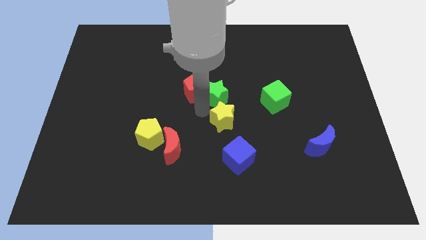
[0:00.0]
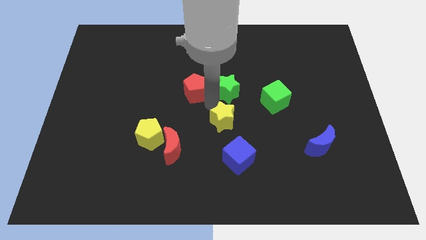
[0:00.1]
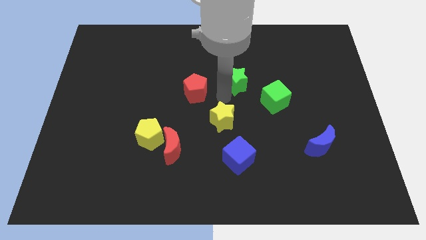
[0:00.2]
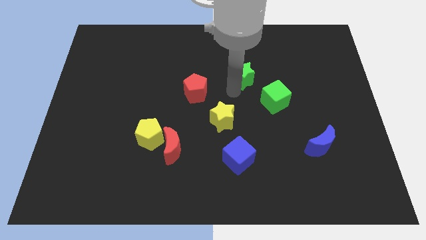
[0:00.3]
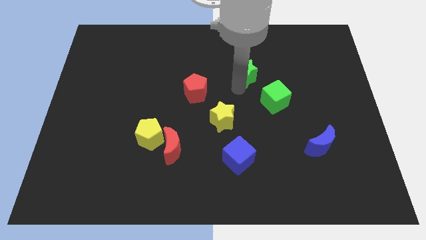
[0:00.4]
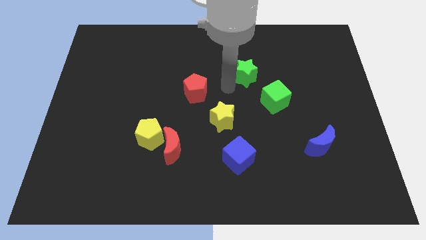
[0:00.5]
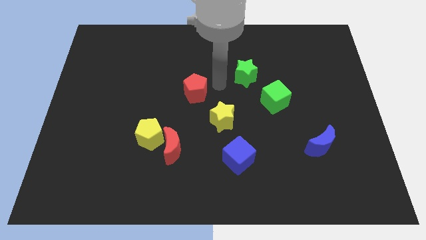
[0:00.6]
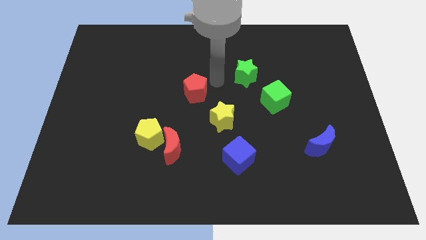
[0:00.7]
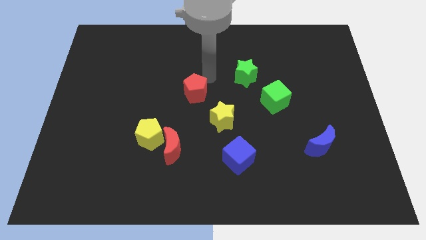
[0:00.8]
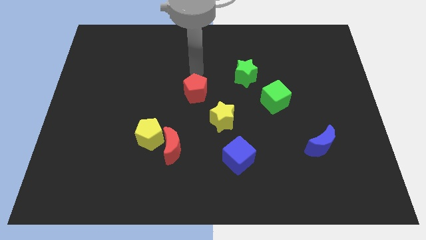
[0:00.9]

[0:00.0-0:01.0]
place green star on top left of green cube

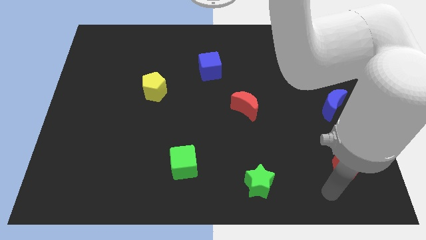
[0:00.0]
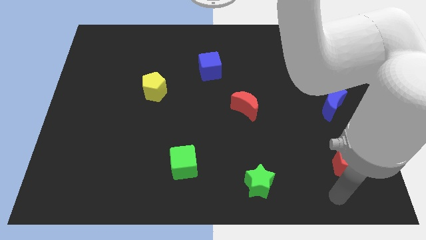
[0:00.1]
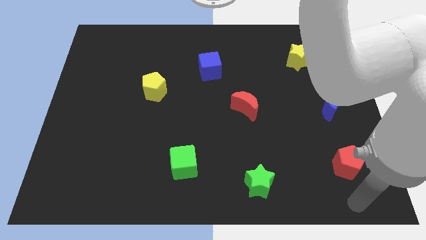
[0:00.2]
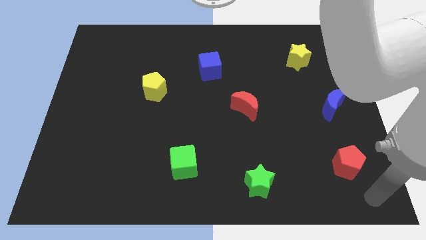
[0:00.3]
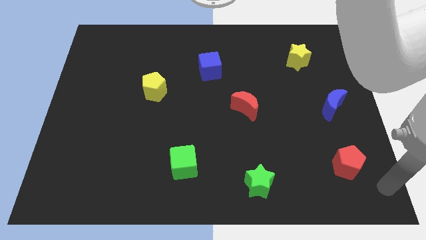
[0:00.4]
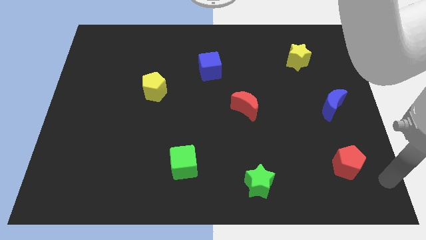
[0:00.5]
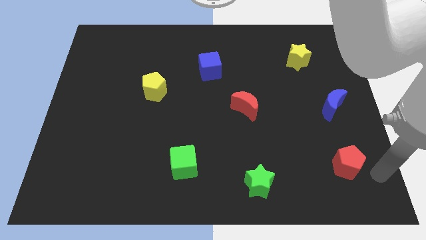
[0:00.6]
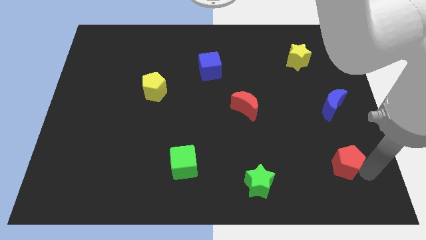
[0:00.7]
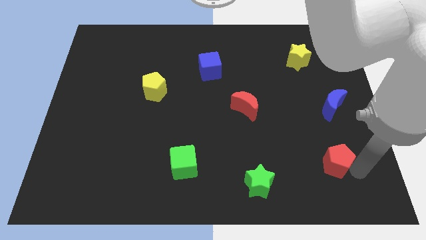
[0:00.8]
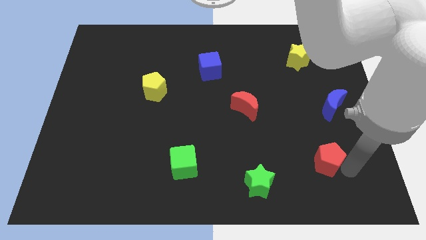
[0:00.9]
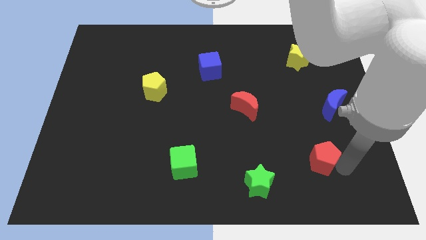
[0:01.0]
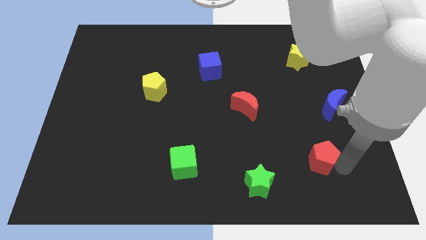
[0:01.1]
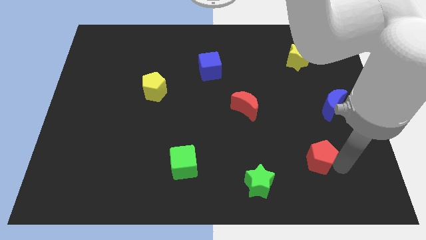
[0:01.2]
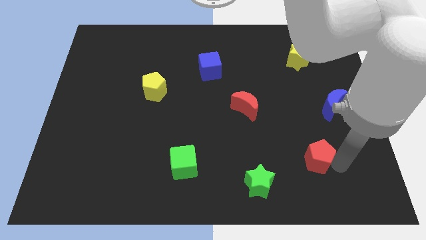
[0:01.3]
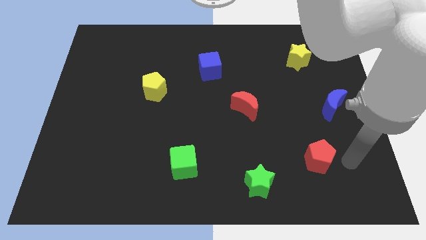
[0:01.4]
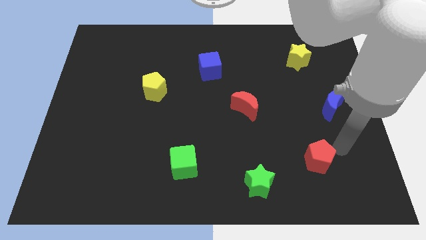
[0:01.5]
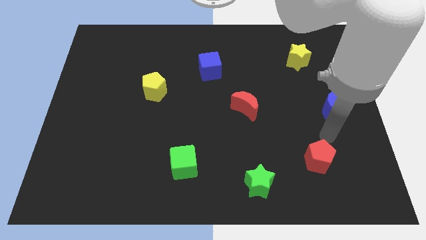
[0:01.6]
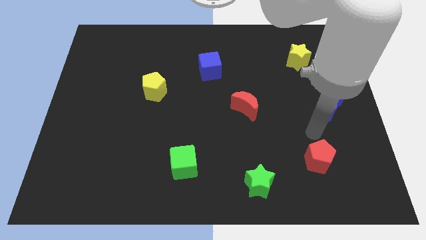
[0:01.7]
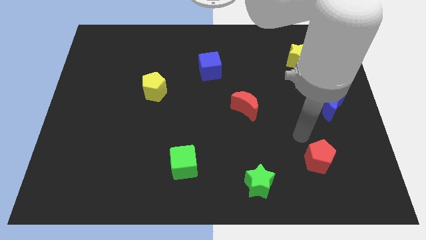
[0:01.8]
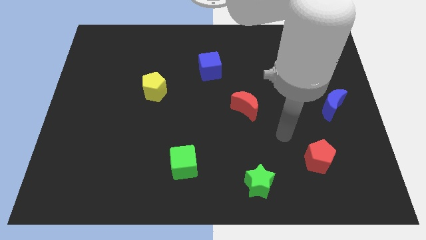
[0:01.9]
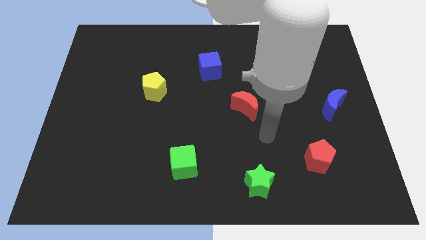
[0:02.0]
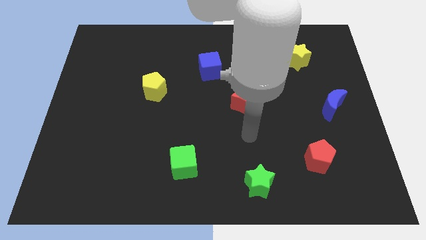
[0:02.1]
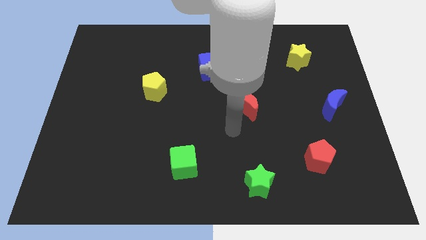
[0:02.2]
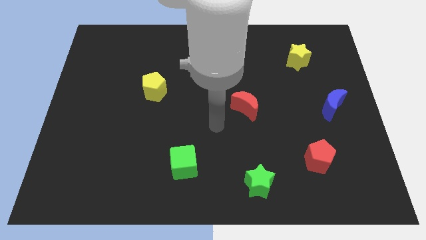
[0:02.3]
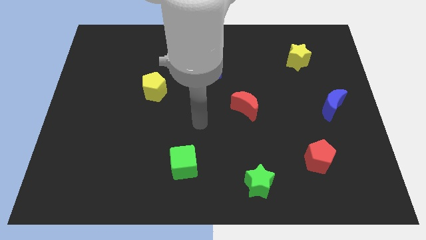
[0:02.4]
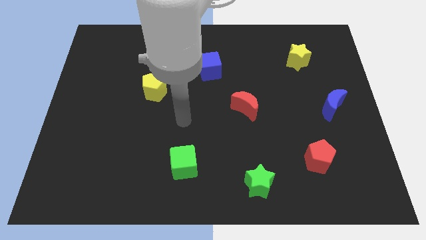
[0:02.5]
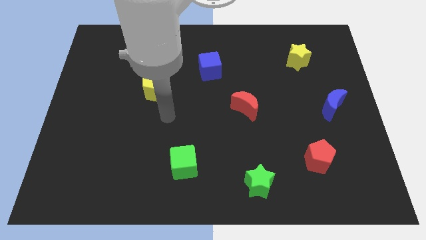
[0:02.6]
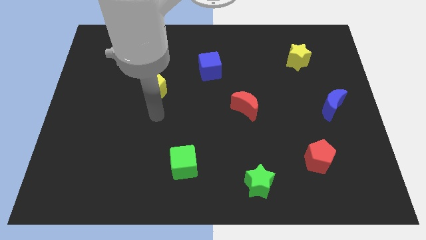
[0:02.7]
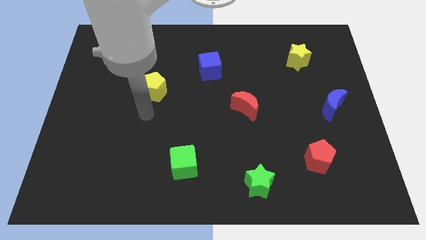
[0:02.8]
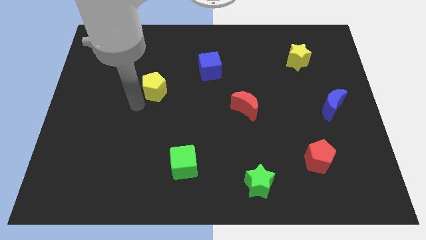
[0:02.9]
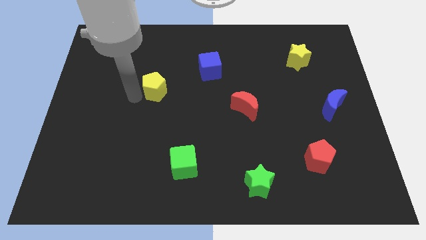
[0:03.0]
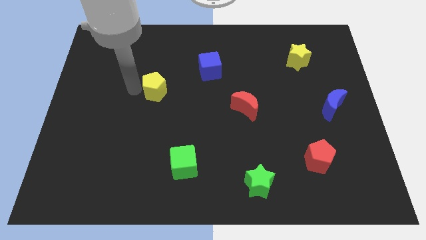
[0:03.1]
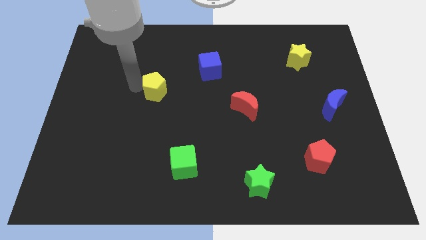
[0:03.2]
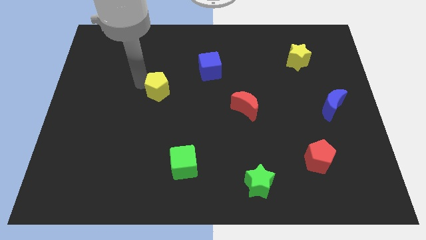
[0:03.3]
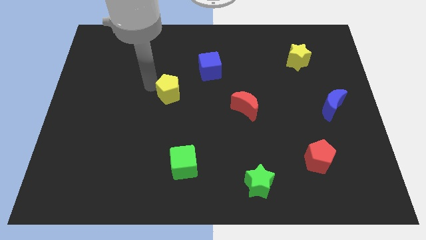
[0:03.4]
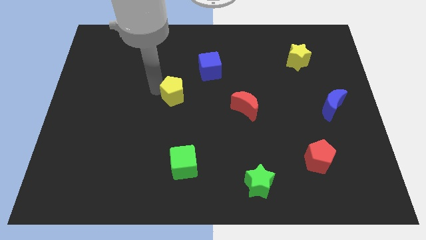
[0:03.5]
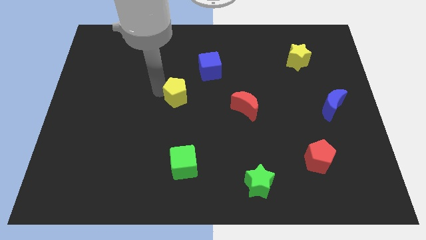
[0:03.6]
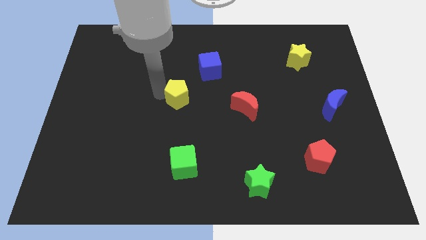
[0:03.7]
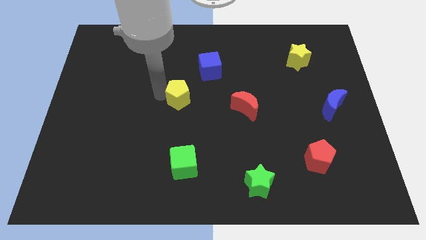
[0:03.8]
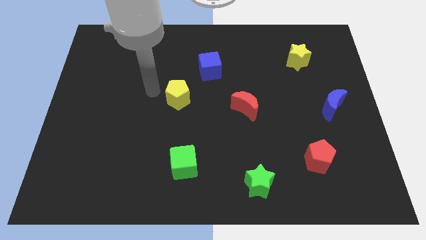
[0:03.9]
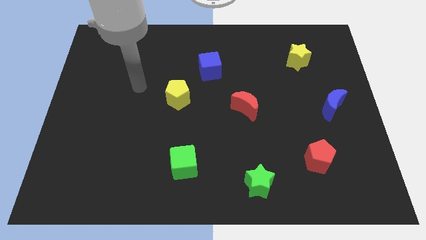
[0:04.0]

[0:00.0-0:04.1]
move your arm away from the red pentagon

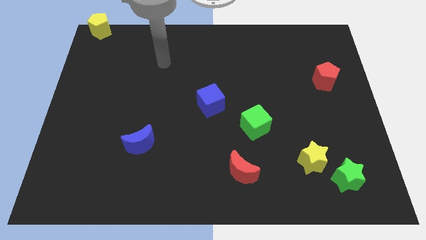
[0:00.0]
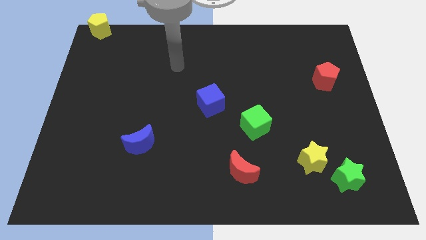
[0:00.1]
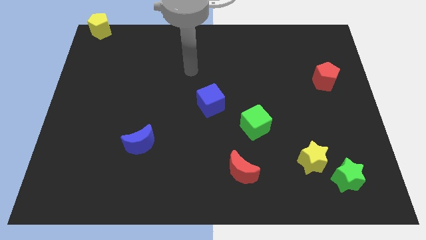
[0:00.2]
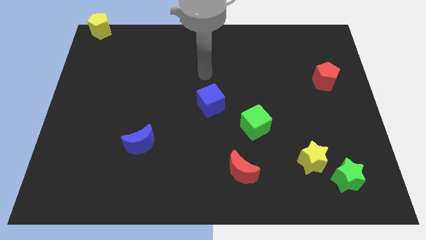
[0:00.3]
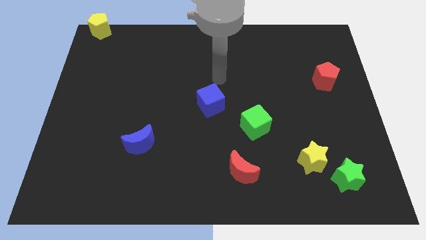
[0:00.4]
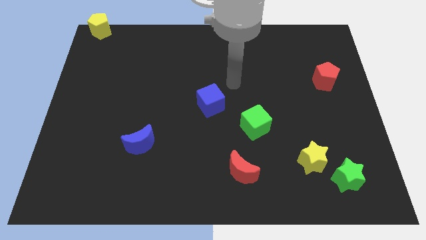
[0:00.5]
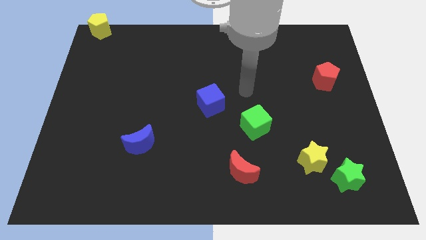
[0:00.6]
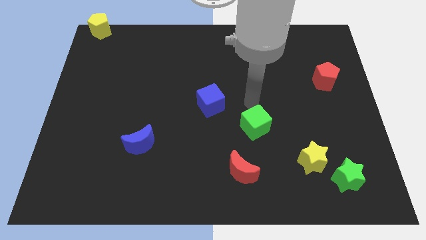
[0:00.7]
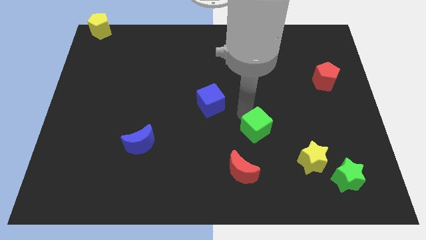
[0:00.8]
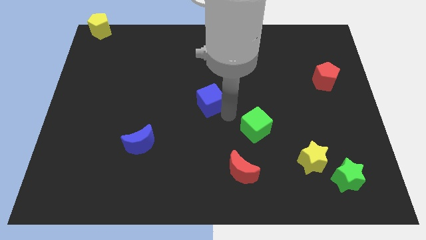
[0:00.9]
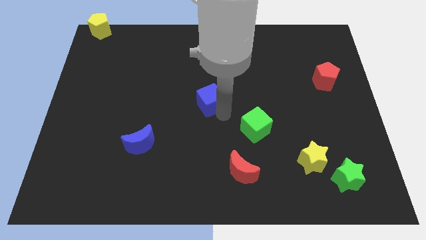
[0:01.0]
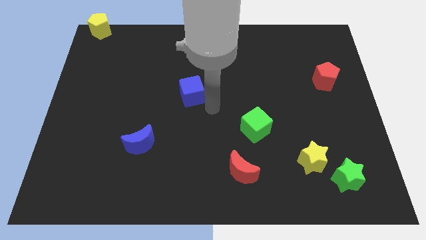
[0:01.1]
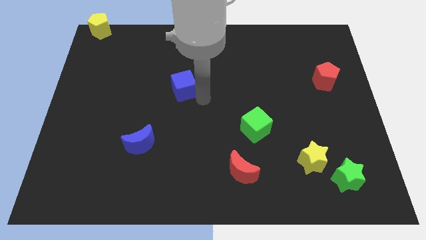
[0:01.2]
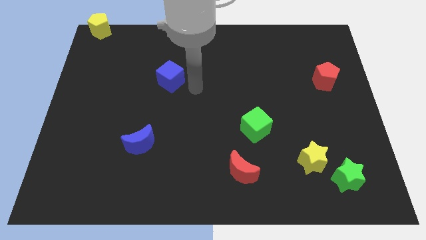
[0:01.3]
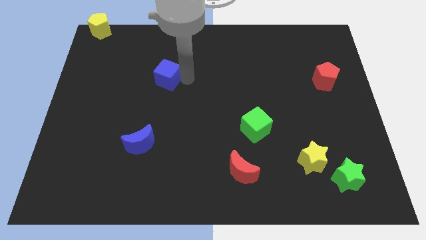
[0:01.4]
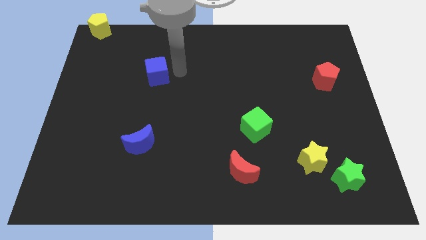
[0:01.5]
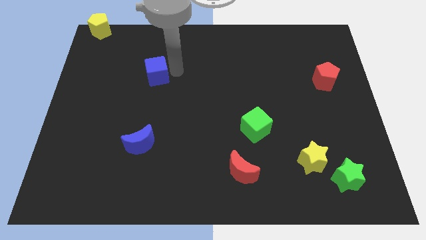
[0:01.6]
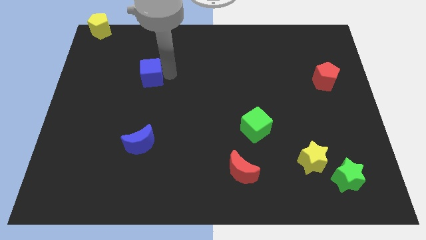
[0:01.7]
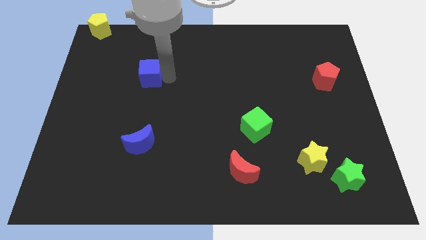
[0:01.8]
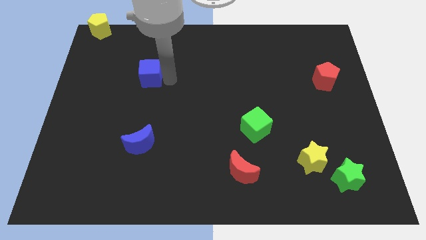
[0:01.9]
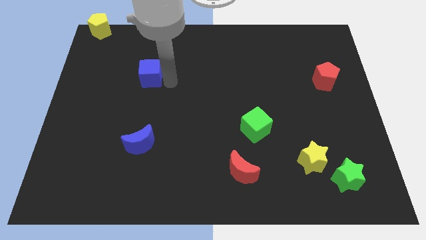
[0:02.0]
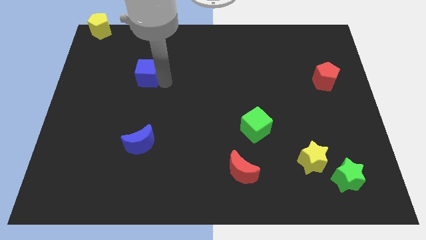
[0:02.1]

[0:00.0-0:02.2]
push the blue cube vertically above the top side of the blue crescent

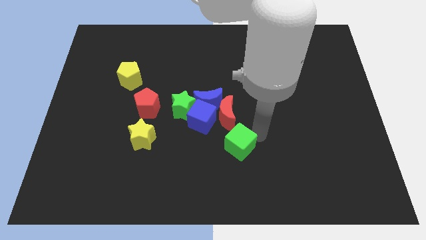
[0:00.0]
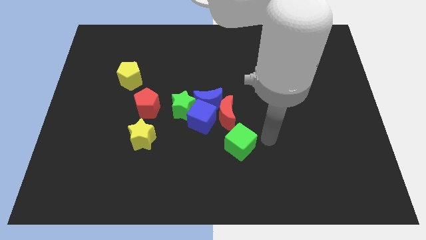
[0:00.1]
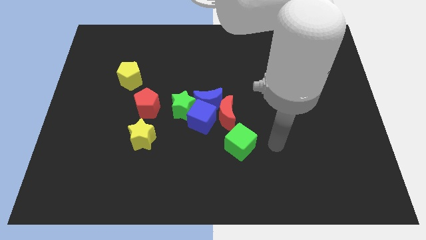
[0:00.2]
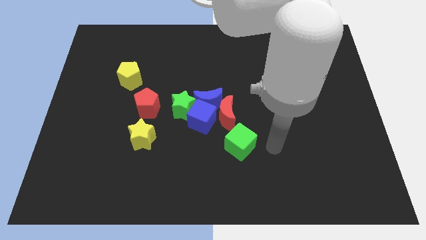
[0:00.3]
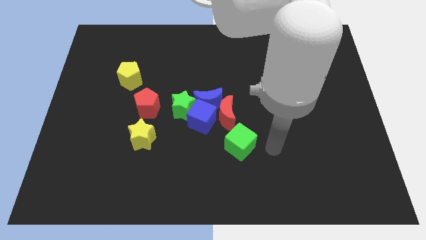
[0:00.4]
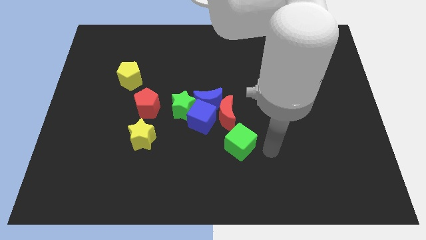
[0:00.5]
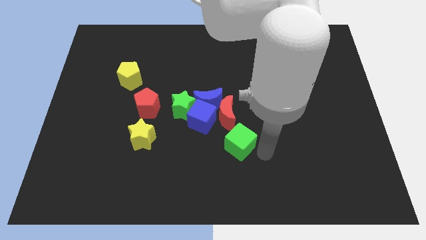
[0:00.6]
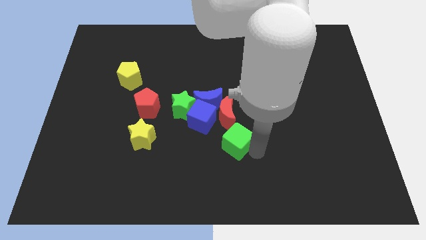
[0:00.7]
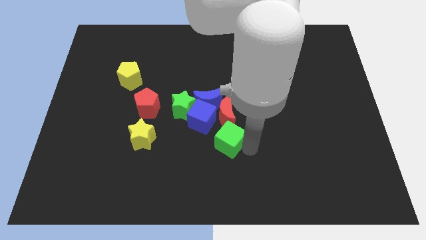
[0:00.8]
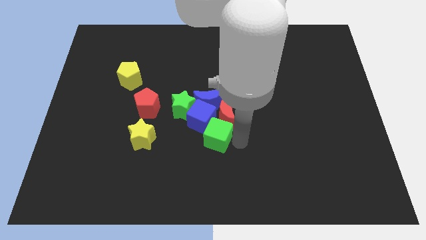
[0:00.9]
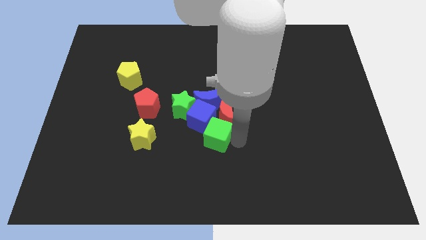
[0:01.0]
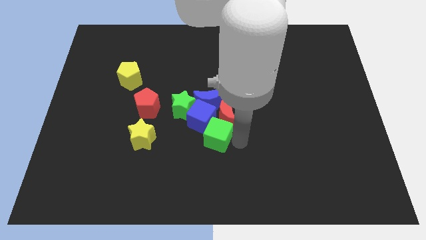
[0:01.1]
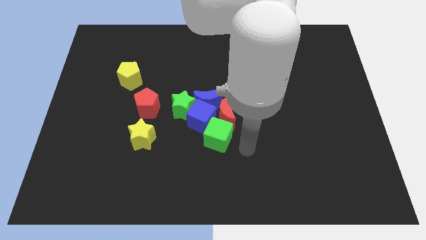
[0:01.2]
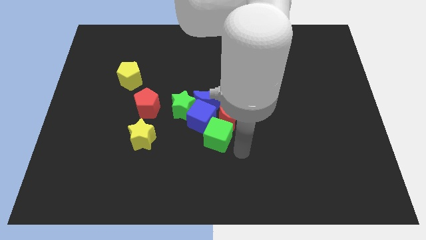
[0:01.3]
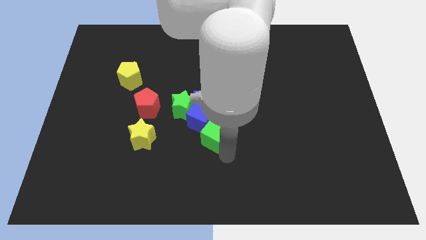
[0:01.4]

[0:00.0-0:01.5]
move green cube into the blue cube

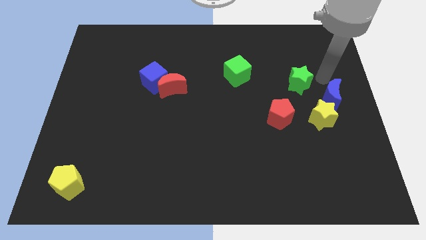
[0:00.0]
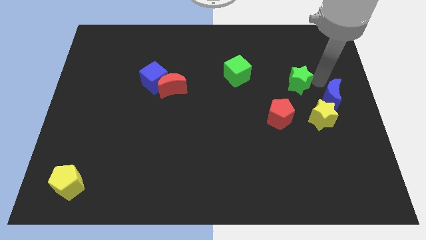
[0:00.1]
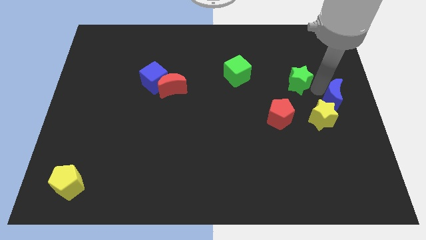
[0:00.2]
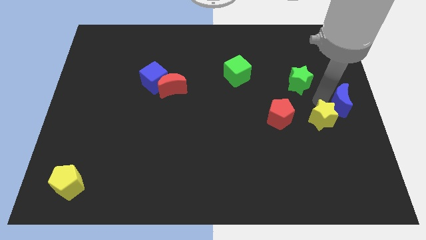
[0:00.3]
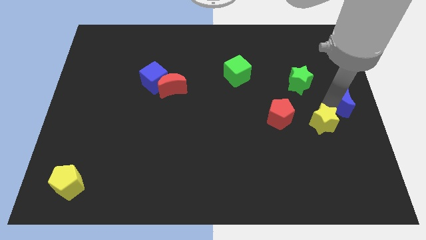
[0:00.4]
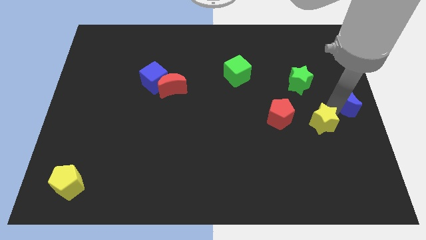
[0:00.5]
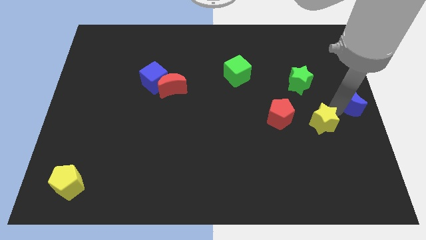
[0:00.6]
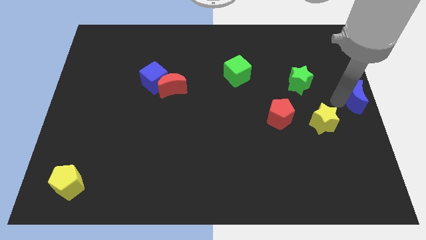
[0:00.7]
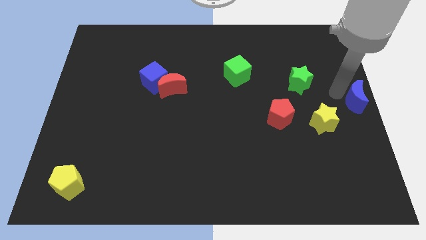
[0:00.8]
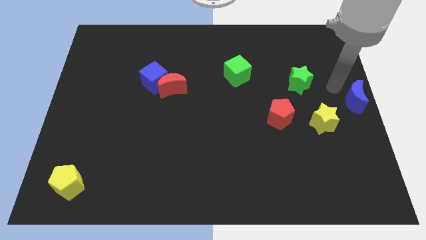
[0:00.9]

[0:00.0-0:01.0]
separate the blue crescent and the yellow star
